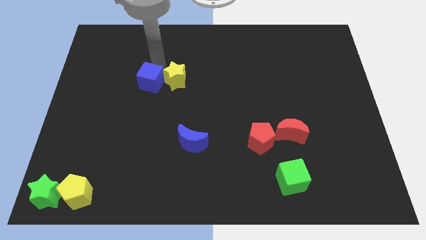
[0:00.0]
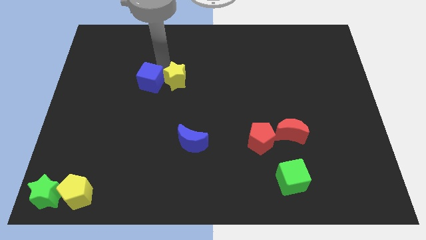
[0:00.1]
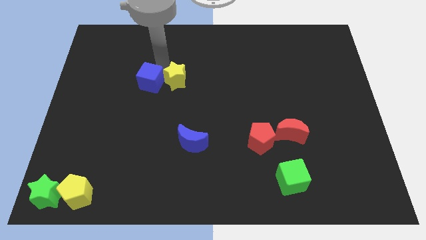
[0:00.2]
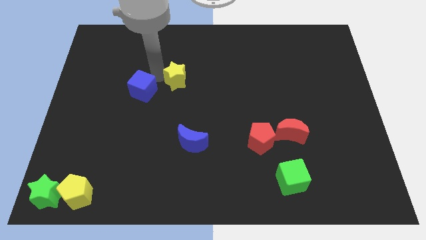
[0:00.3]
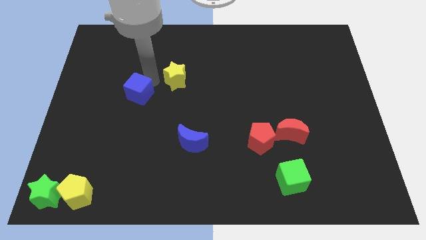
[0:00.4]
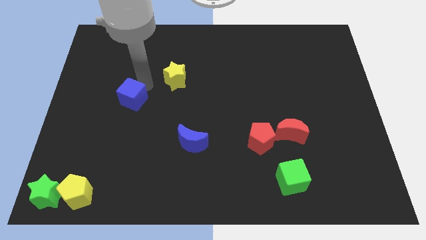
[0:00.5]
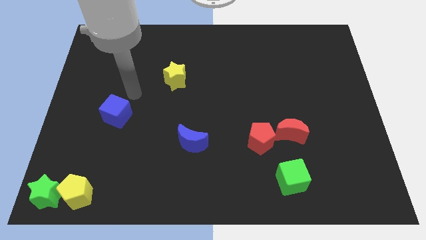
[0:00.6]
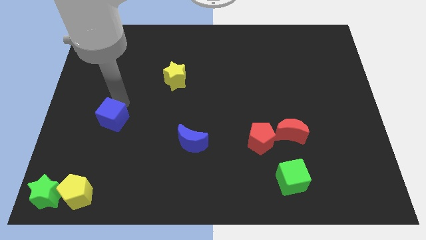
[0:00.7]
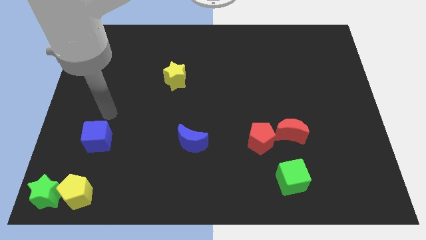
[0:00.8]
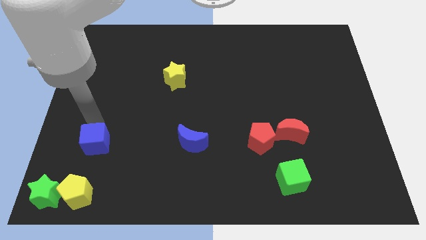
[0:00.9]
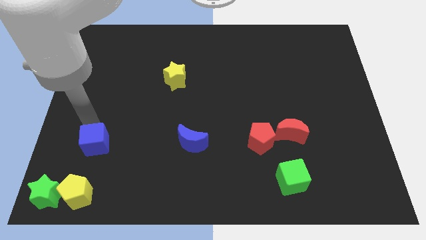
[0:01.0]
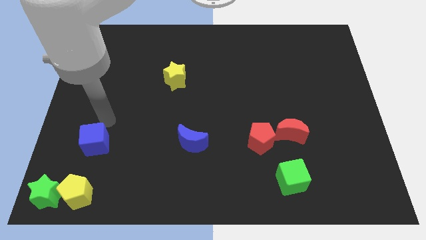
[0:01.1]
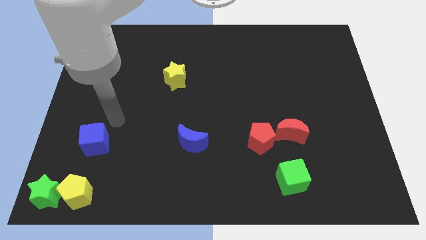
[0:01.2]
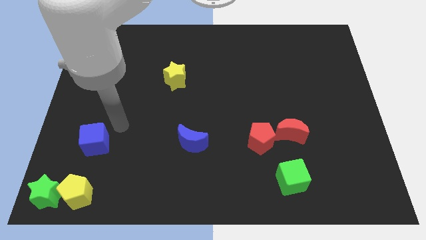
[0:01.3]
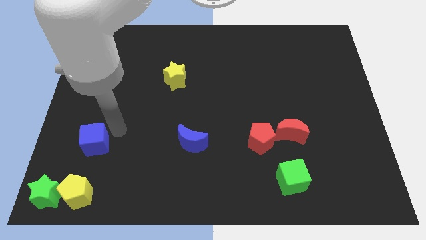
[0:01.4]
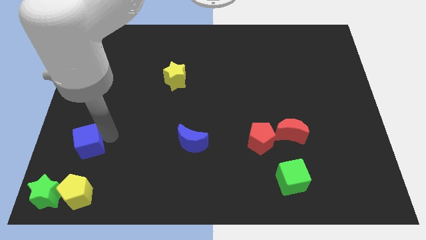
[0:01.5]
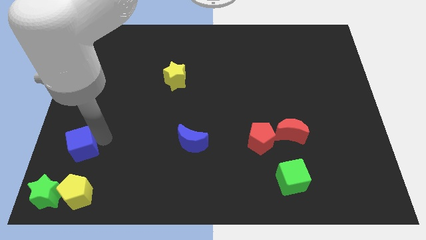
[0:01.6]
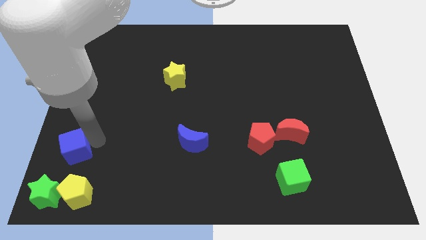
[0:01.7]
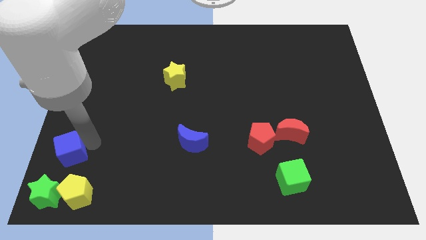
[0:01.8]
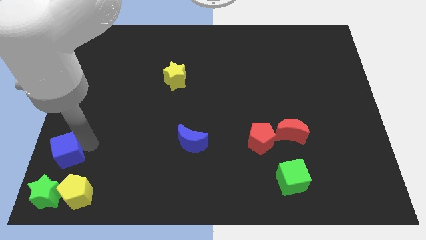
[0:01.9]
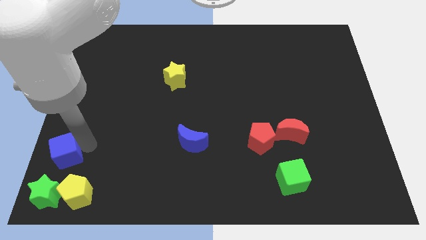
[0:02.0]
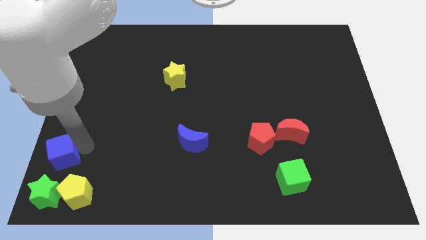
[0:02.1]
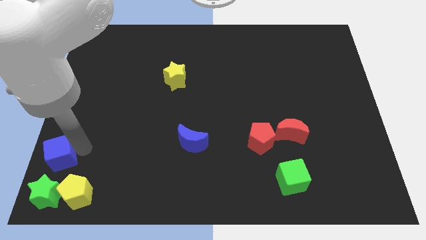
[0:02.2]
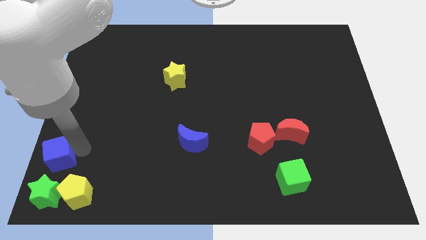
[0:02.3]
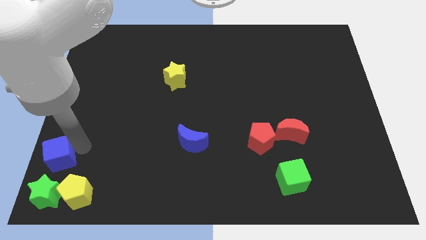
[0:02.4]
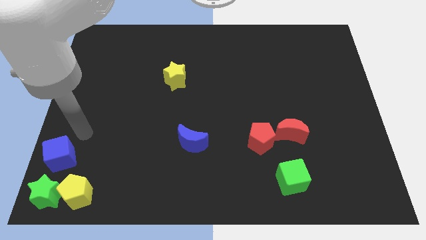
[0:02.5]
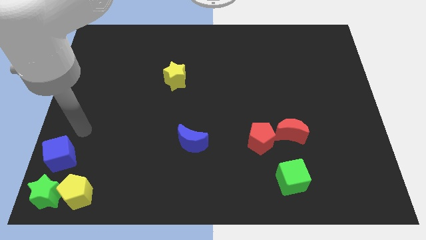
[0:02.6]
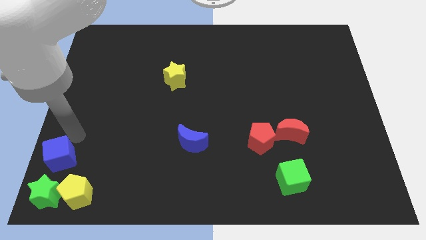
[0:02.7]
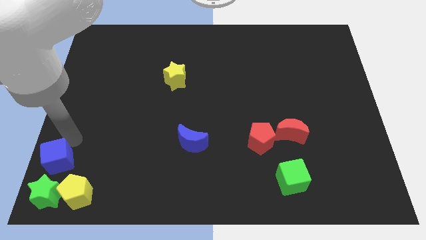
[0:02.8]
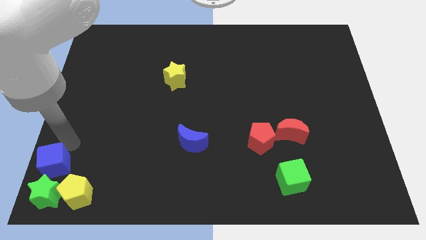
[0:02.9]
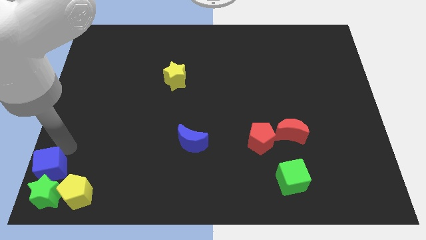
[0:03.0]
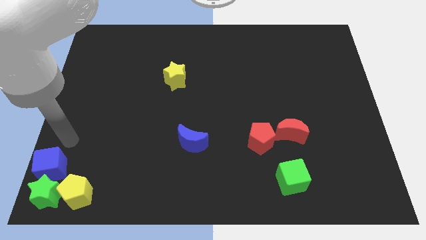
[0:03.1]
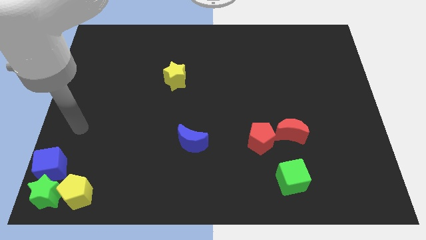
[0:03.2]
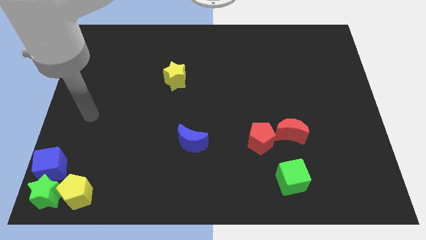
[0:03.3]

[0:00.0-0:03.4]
place blue cube above green star

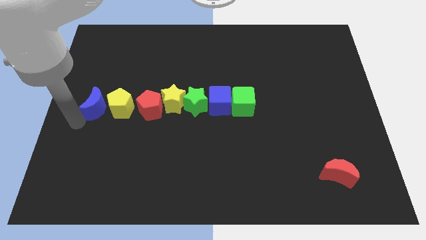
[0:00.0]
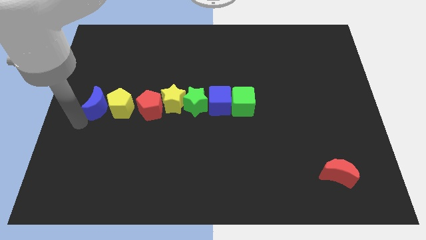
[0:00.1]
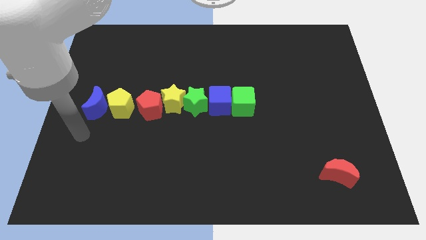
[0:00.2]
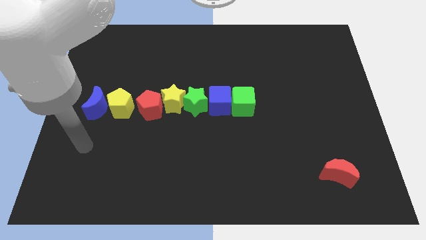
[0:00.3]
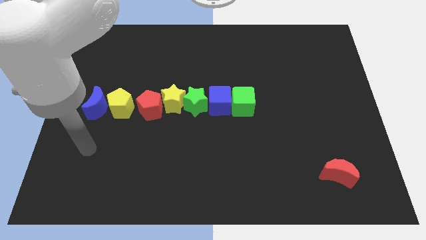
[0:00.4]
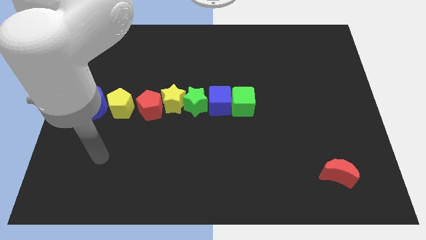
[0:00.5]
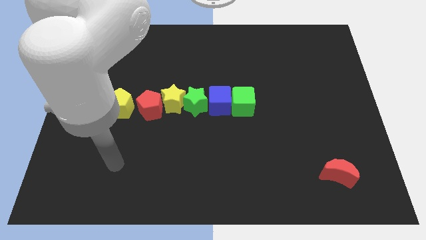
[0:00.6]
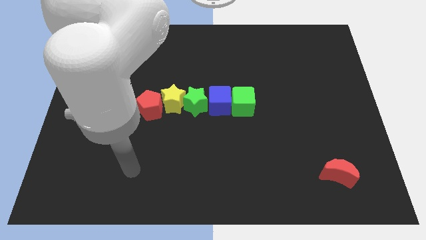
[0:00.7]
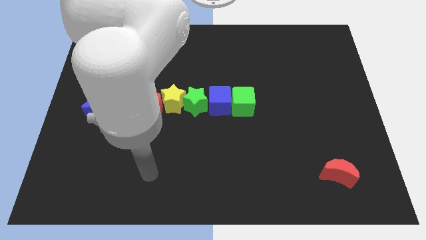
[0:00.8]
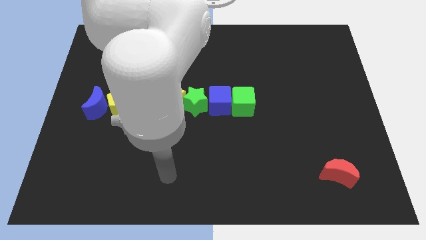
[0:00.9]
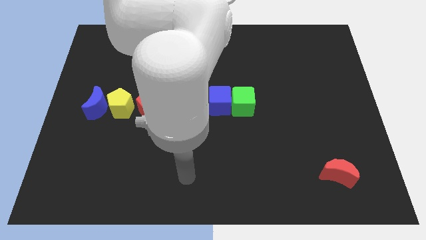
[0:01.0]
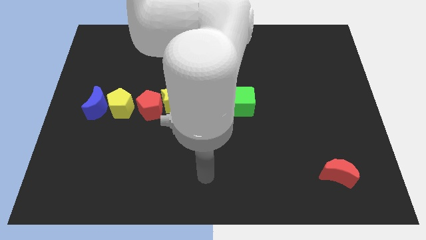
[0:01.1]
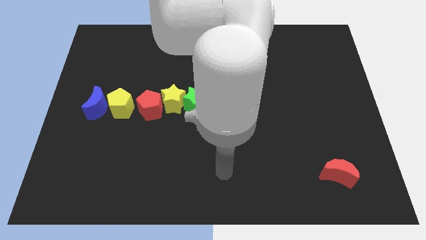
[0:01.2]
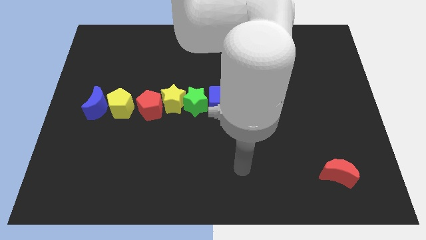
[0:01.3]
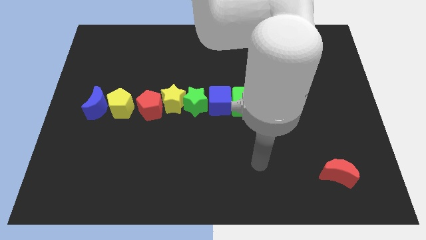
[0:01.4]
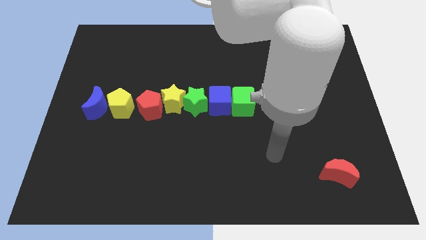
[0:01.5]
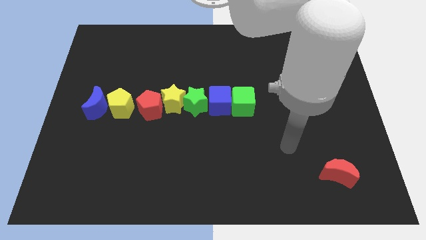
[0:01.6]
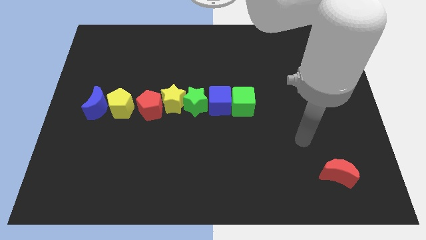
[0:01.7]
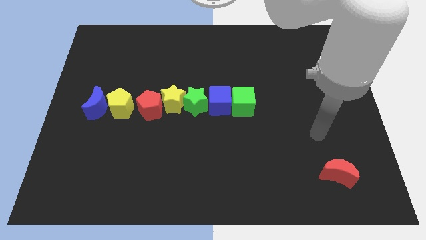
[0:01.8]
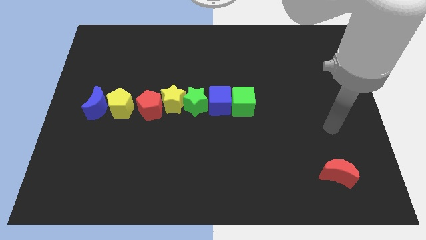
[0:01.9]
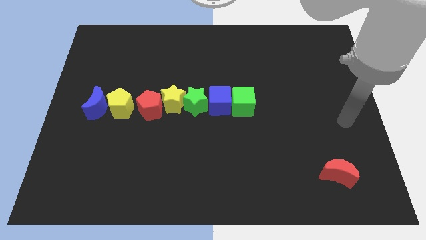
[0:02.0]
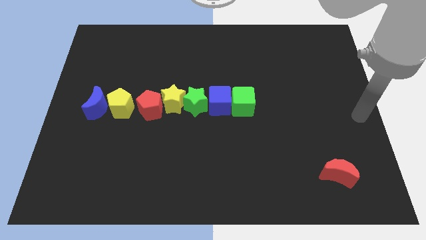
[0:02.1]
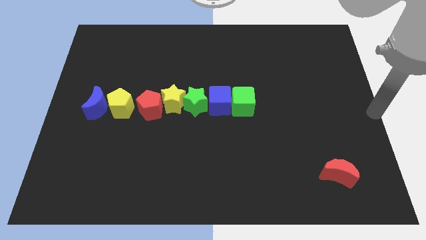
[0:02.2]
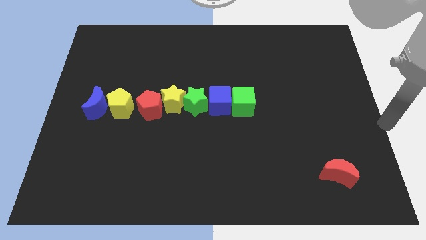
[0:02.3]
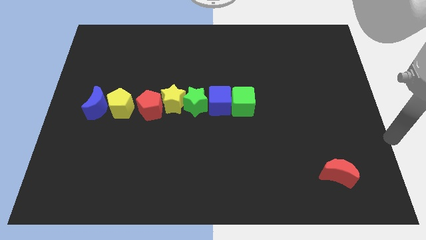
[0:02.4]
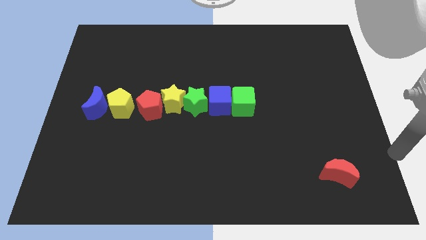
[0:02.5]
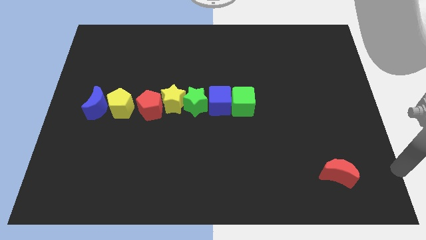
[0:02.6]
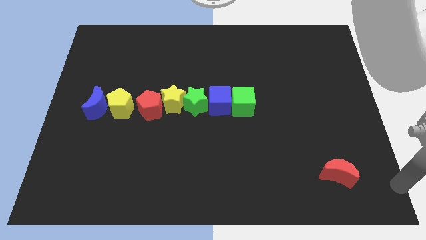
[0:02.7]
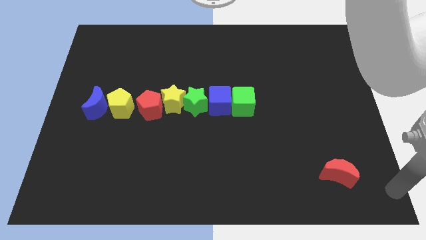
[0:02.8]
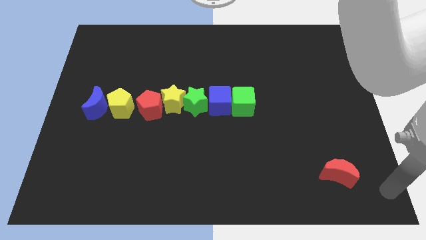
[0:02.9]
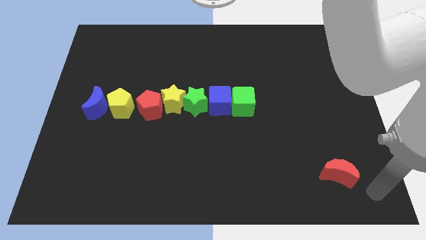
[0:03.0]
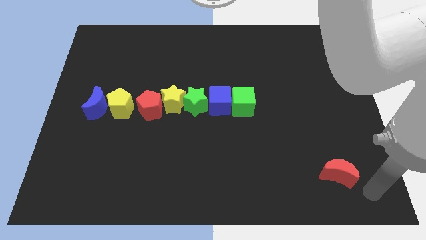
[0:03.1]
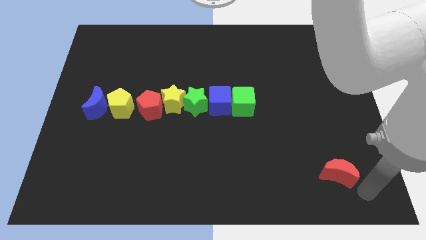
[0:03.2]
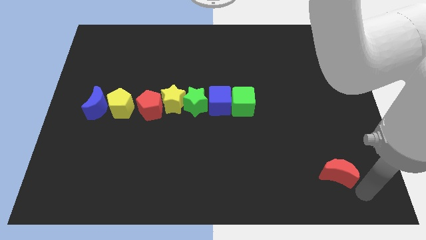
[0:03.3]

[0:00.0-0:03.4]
move the arm towards the right of the red crescent

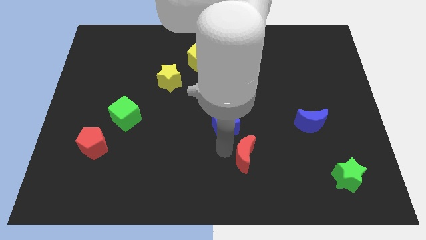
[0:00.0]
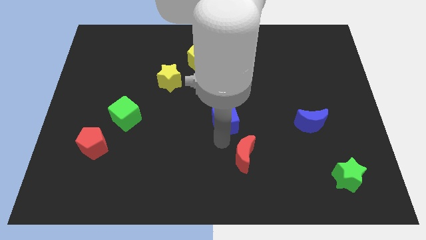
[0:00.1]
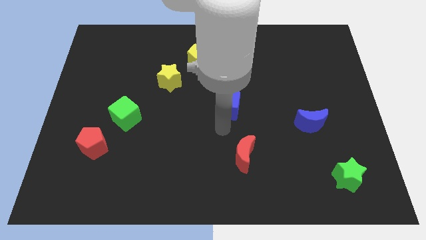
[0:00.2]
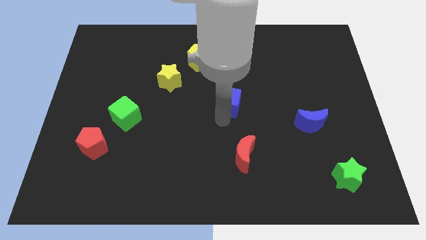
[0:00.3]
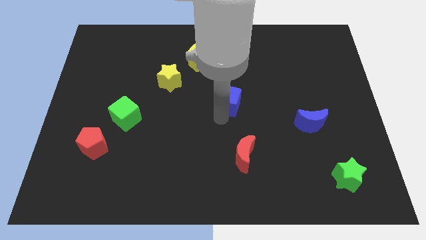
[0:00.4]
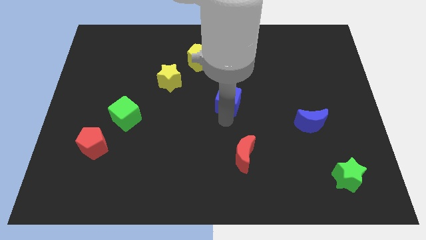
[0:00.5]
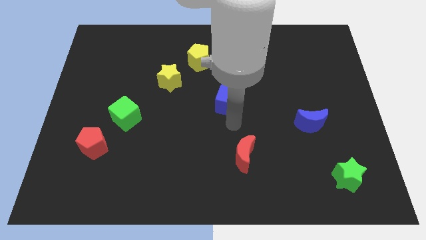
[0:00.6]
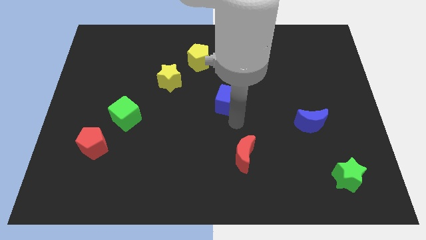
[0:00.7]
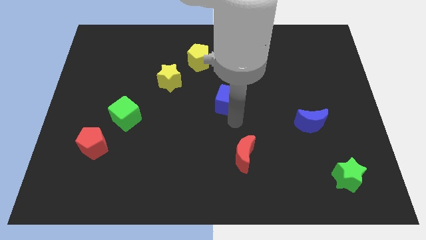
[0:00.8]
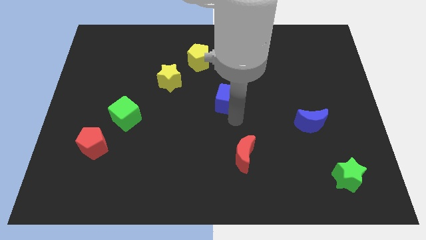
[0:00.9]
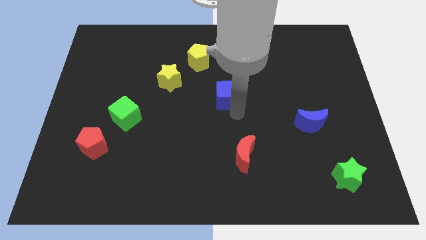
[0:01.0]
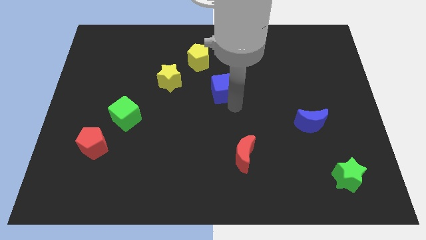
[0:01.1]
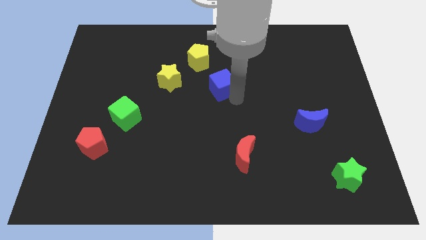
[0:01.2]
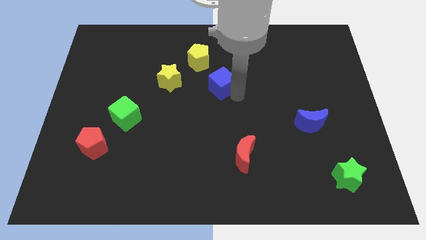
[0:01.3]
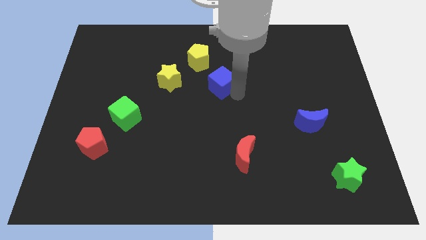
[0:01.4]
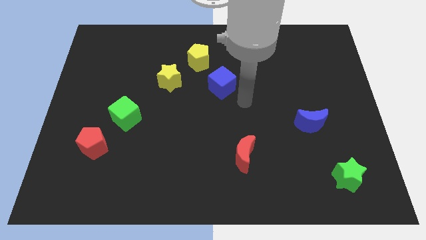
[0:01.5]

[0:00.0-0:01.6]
put the blue cube parallel to yellow star

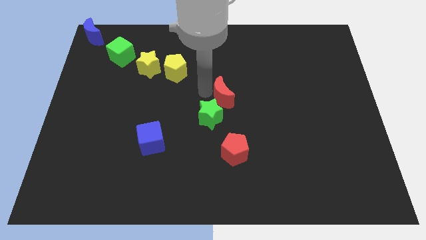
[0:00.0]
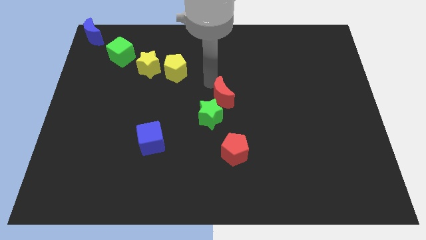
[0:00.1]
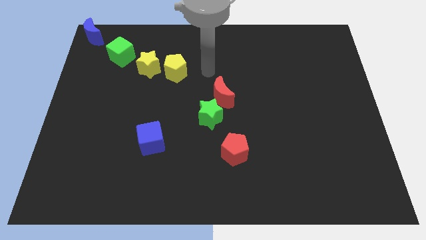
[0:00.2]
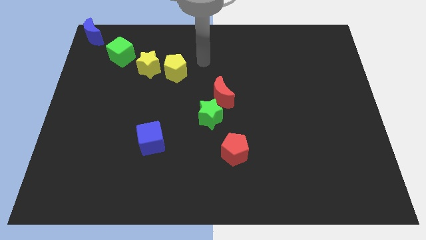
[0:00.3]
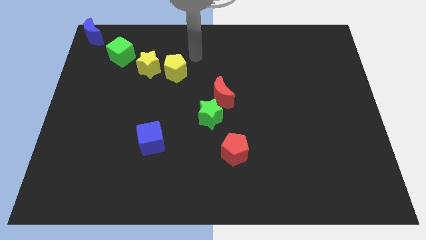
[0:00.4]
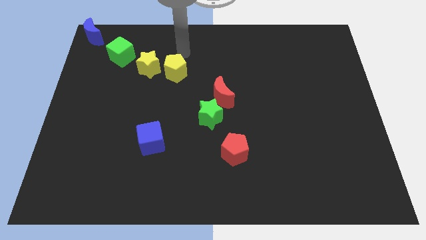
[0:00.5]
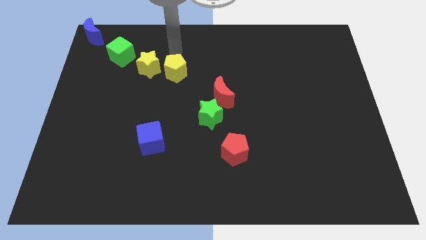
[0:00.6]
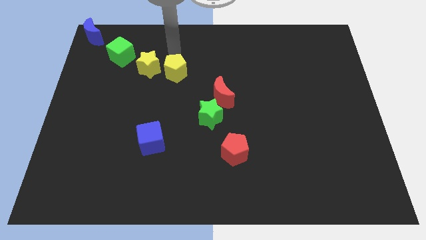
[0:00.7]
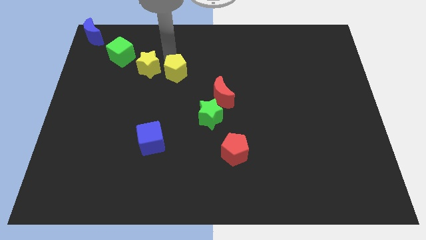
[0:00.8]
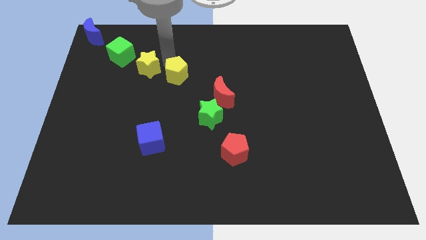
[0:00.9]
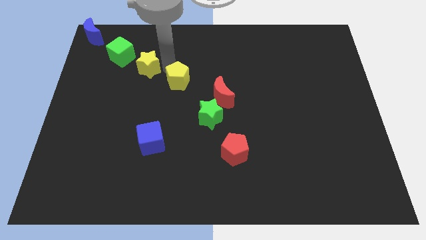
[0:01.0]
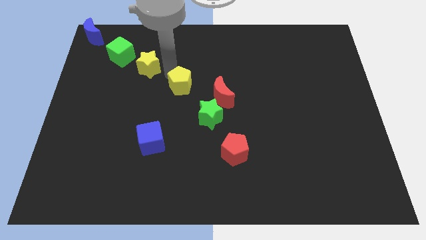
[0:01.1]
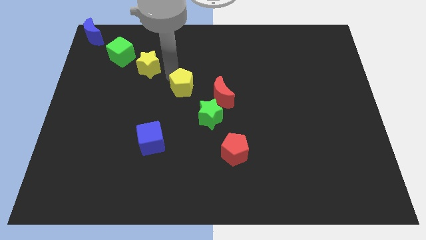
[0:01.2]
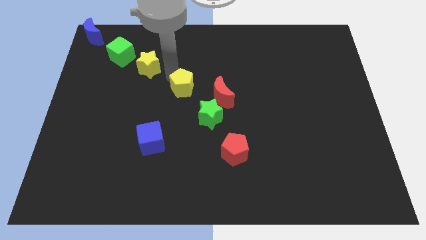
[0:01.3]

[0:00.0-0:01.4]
push the yellow pentagon towards the green star
